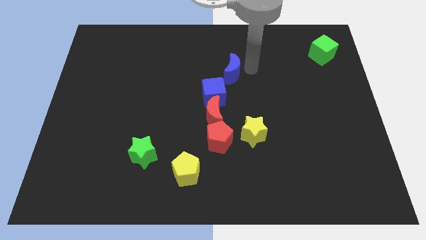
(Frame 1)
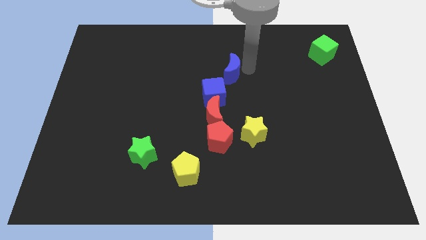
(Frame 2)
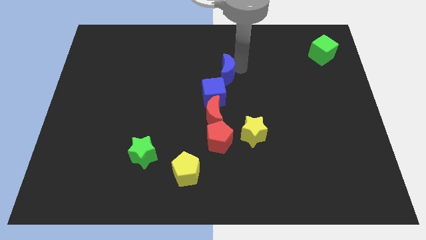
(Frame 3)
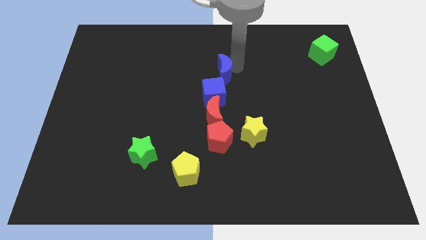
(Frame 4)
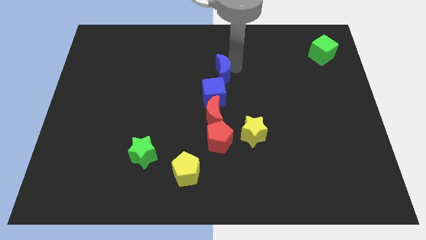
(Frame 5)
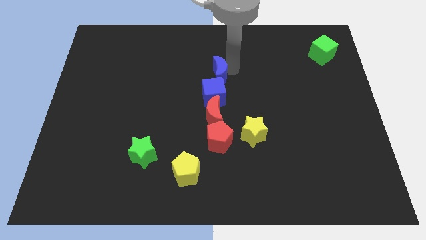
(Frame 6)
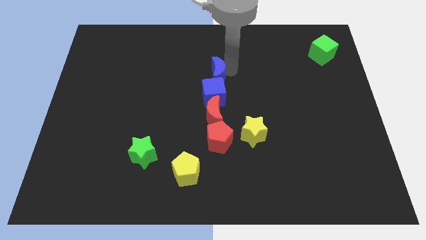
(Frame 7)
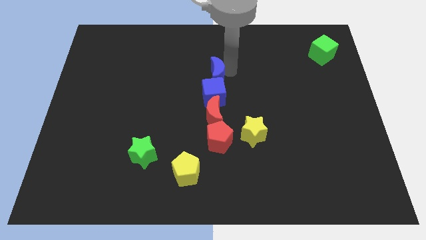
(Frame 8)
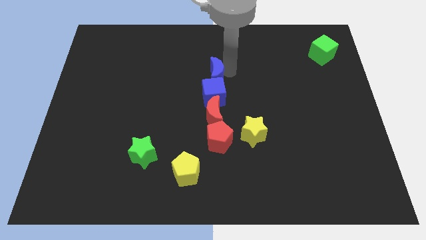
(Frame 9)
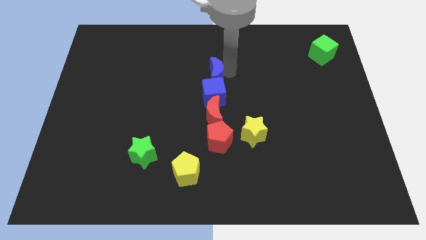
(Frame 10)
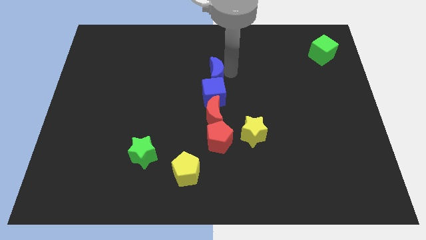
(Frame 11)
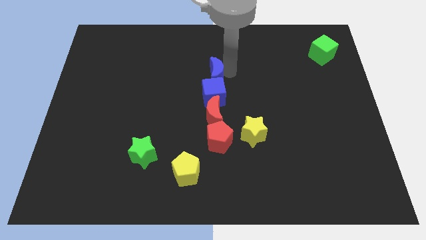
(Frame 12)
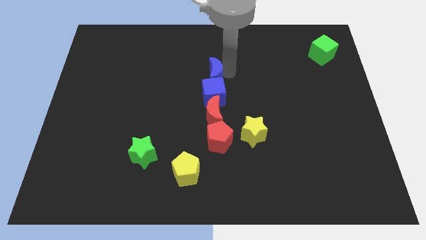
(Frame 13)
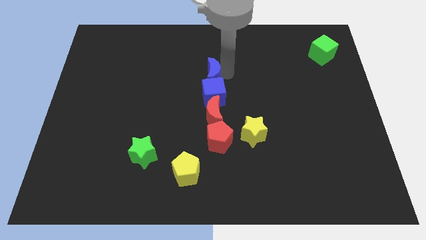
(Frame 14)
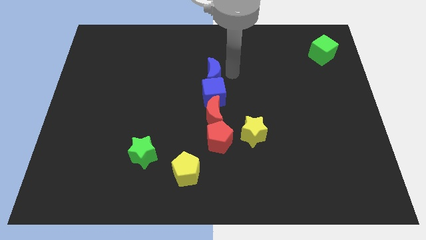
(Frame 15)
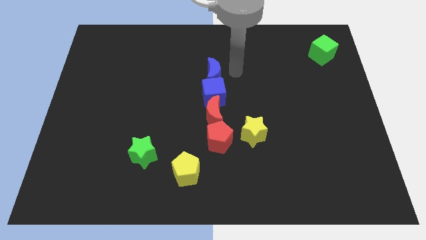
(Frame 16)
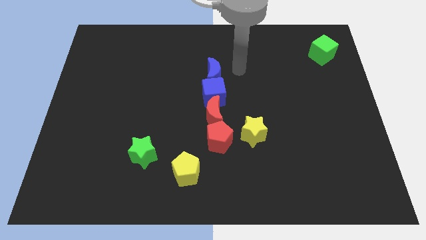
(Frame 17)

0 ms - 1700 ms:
place the blue crescent above the blue cube

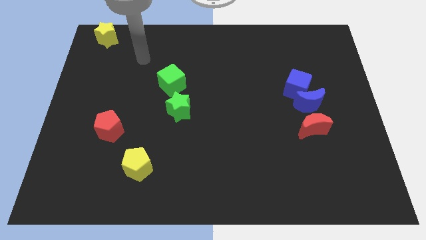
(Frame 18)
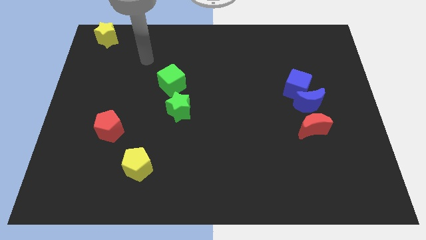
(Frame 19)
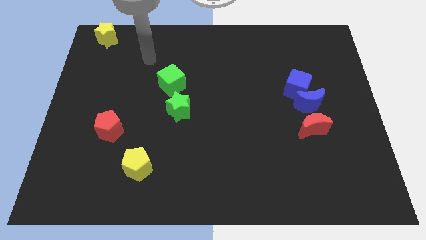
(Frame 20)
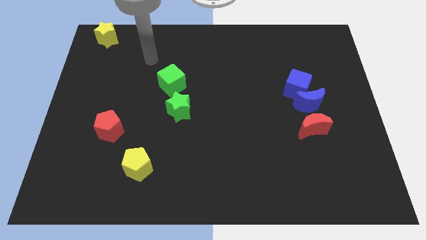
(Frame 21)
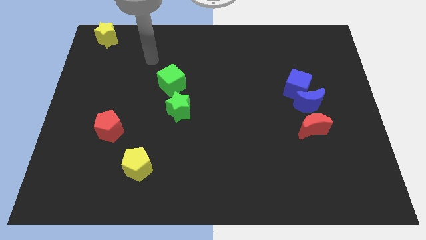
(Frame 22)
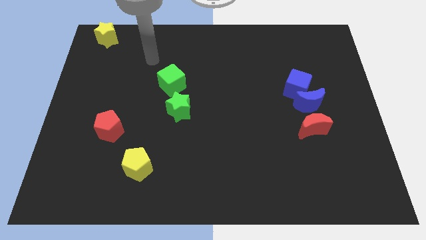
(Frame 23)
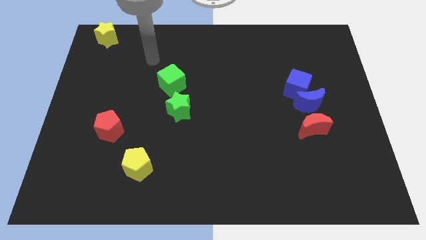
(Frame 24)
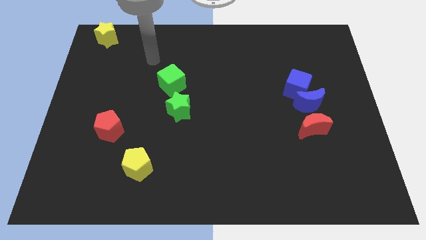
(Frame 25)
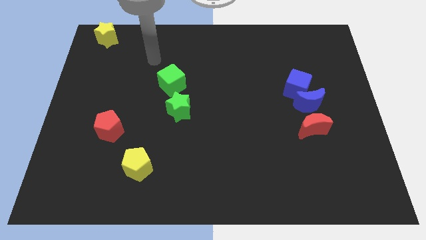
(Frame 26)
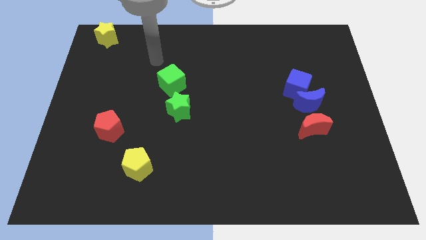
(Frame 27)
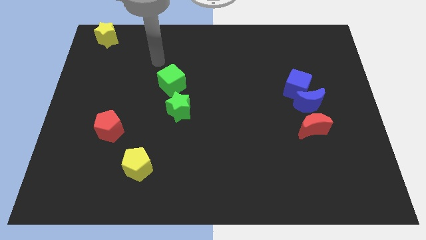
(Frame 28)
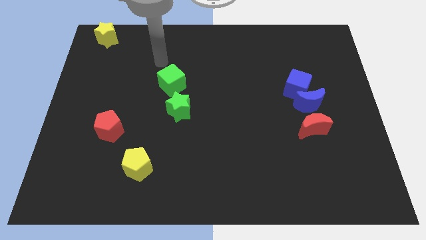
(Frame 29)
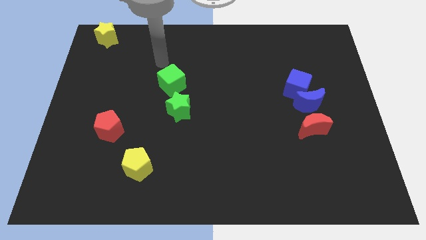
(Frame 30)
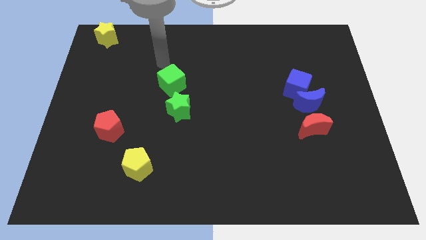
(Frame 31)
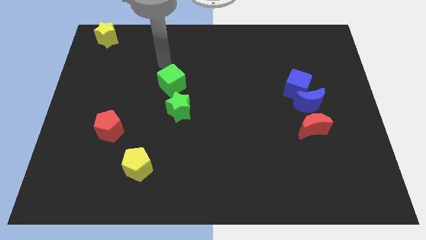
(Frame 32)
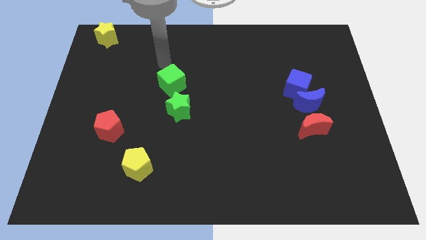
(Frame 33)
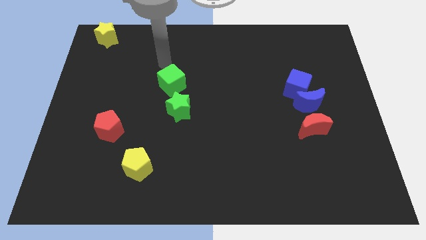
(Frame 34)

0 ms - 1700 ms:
move your arm to the top of the green cube

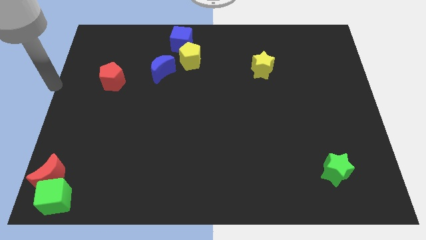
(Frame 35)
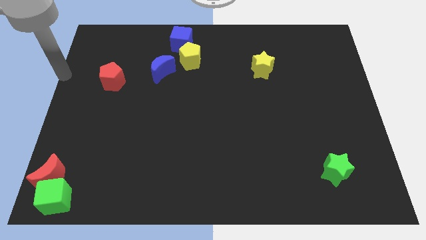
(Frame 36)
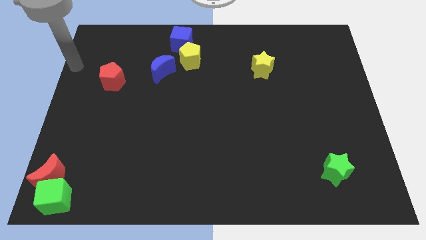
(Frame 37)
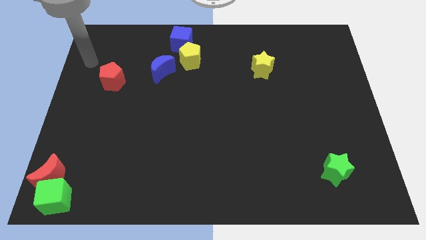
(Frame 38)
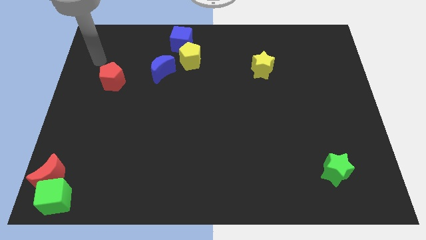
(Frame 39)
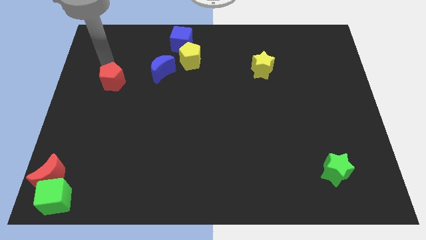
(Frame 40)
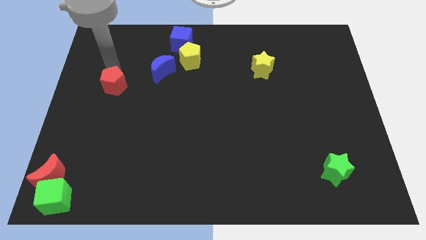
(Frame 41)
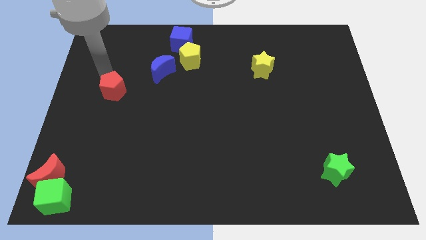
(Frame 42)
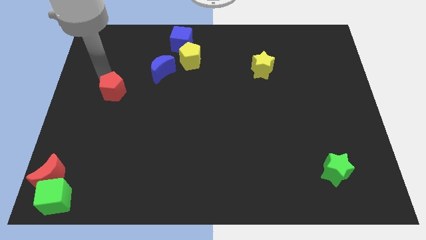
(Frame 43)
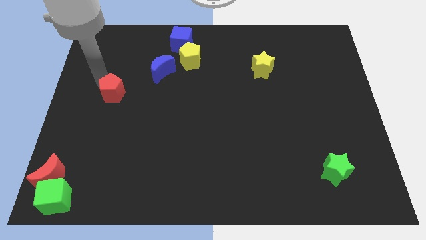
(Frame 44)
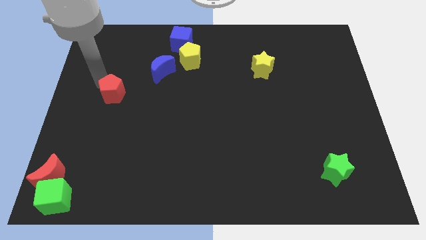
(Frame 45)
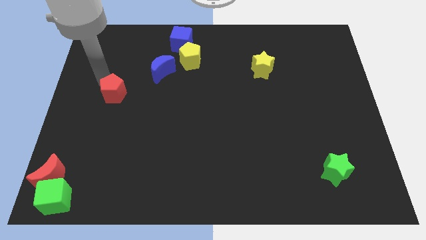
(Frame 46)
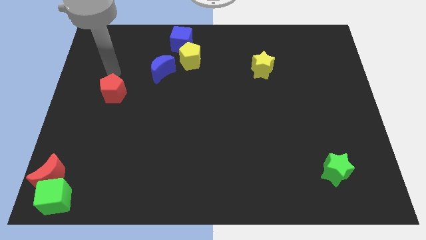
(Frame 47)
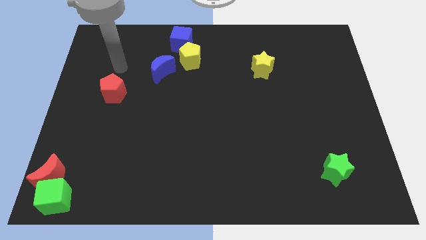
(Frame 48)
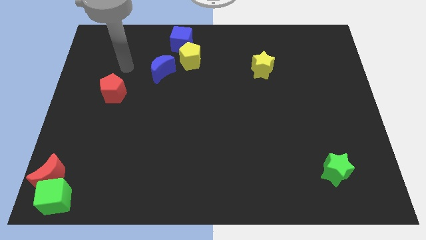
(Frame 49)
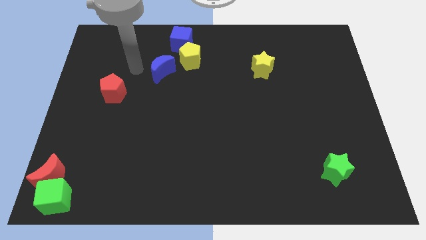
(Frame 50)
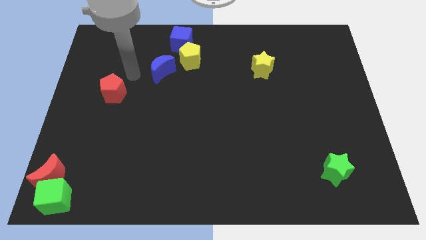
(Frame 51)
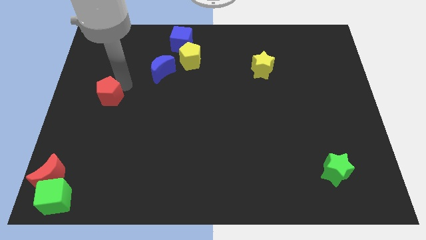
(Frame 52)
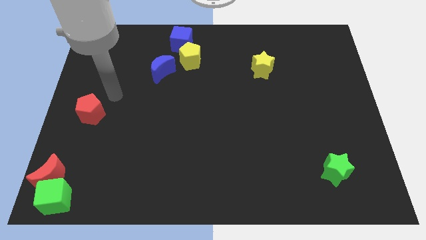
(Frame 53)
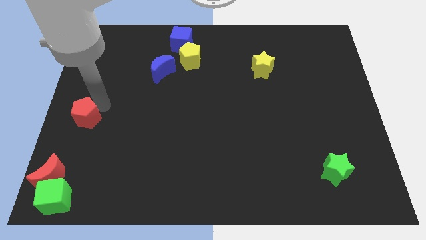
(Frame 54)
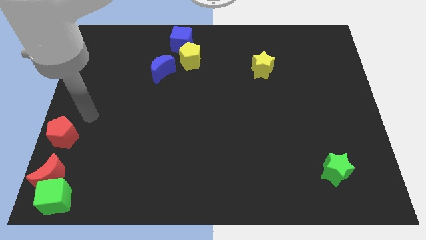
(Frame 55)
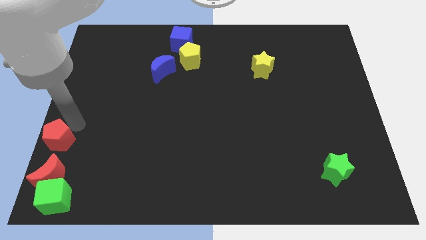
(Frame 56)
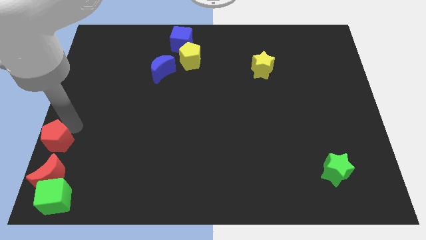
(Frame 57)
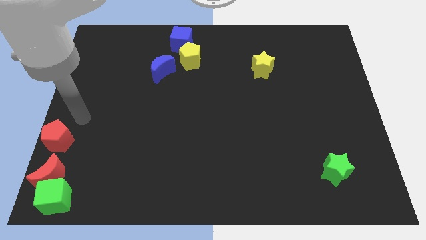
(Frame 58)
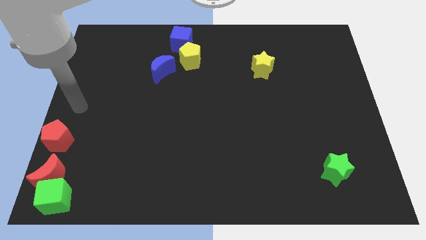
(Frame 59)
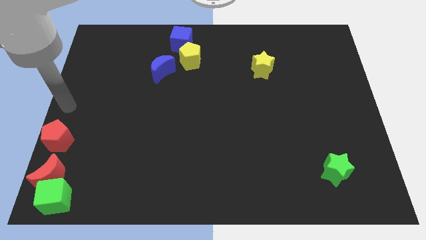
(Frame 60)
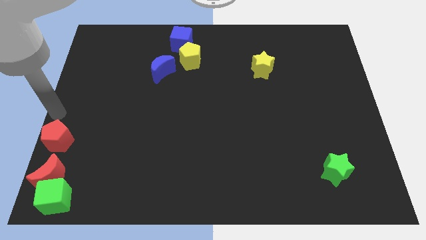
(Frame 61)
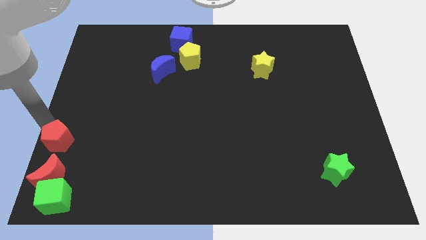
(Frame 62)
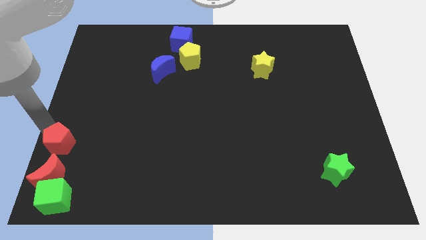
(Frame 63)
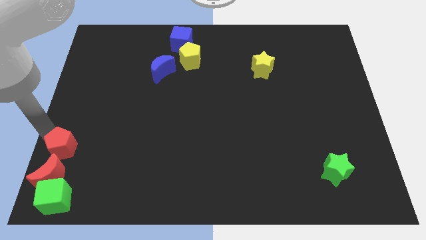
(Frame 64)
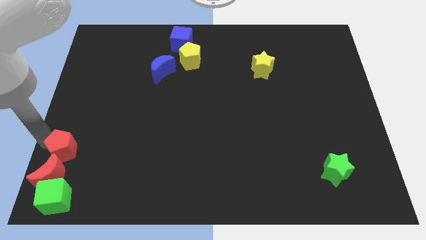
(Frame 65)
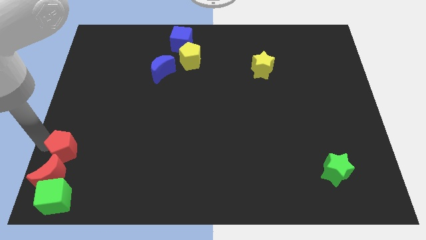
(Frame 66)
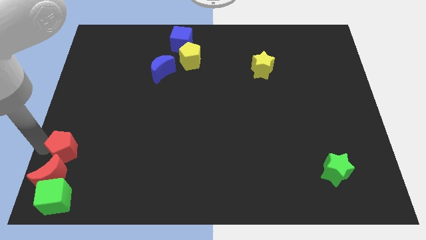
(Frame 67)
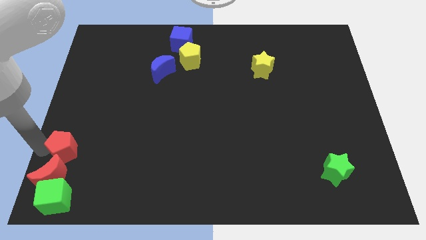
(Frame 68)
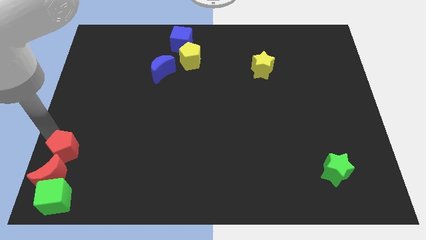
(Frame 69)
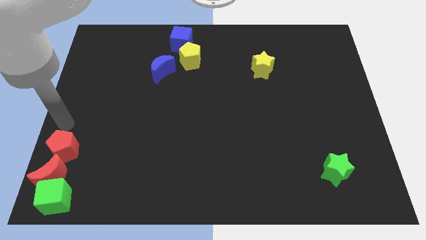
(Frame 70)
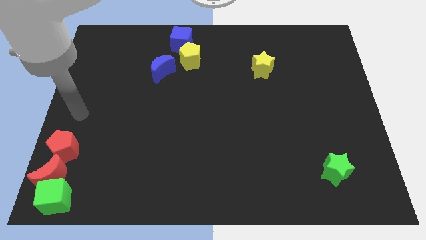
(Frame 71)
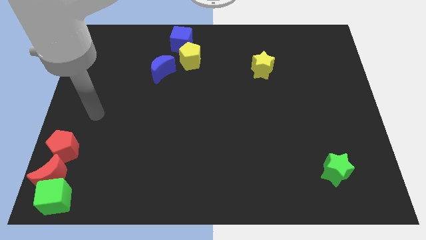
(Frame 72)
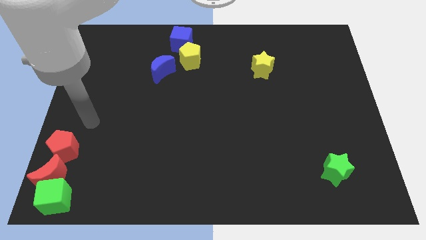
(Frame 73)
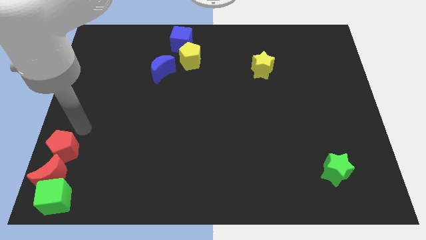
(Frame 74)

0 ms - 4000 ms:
push the red pentagon towards the red crescent

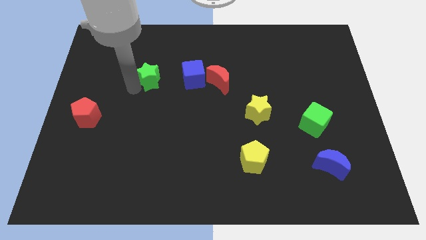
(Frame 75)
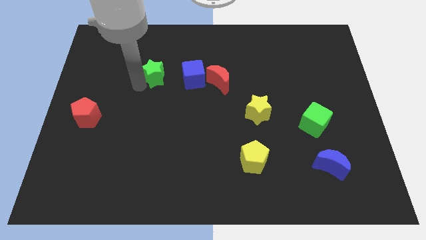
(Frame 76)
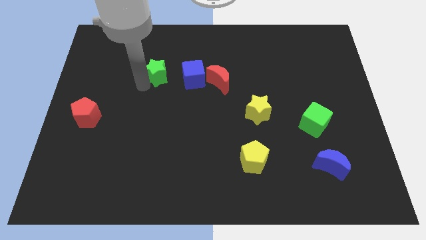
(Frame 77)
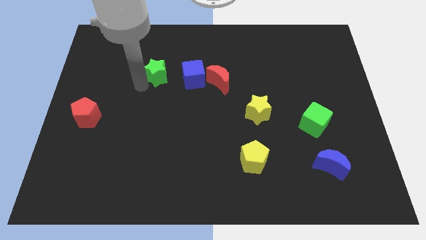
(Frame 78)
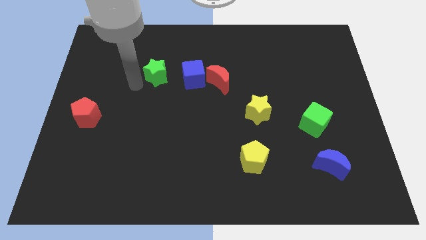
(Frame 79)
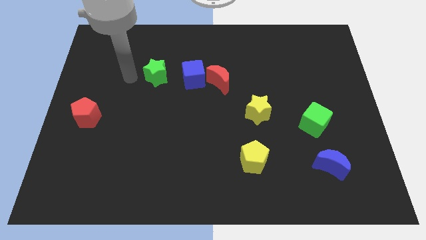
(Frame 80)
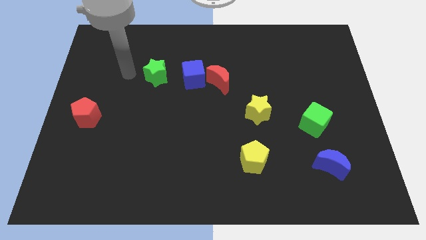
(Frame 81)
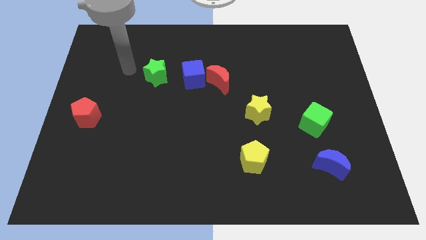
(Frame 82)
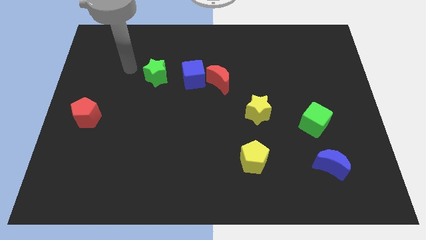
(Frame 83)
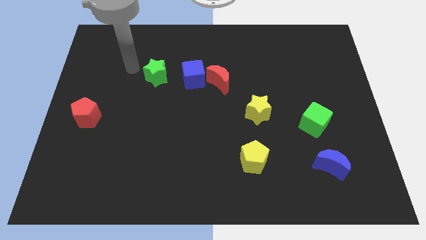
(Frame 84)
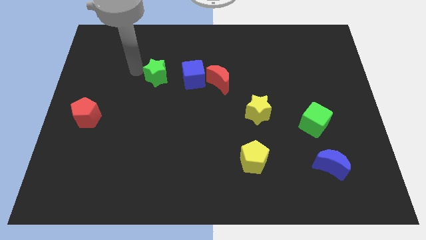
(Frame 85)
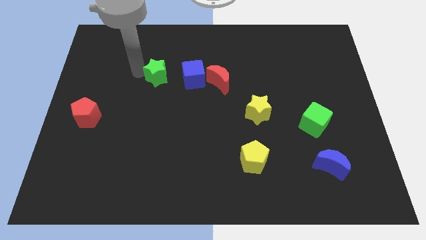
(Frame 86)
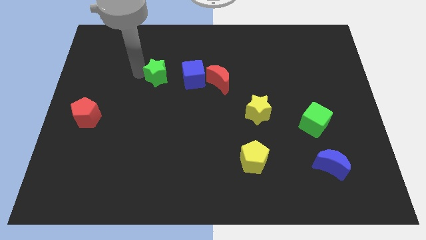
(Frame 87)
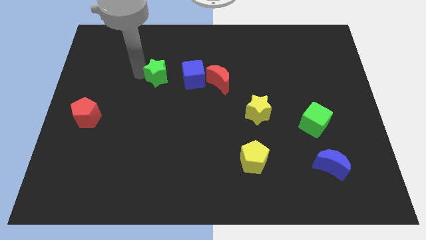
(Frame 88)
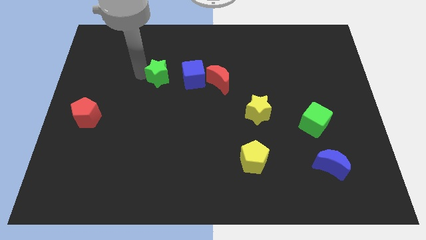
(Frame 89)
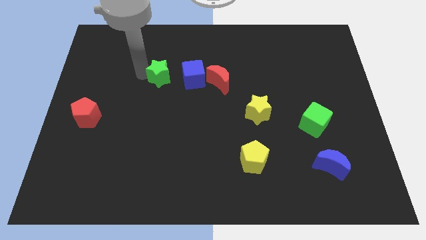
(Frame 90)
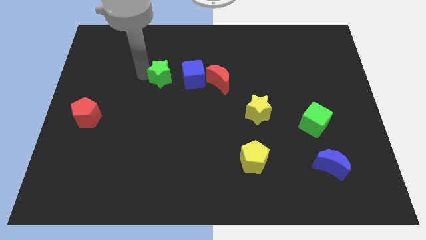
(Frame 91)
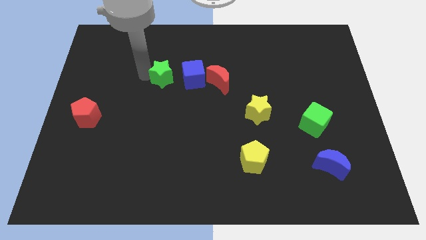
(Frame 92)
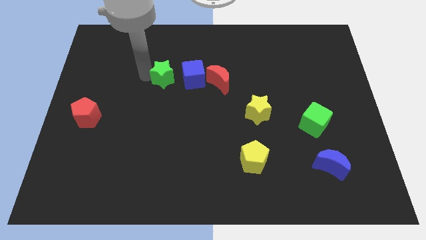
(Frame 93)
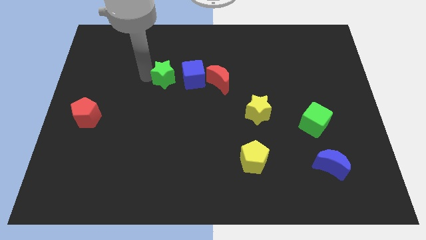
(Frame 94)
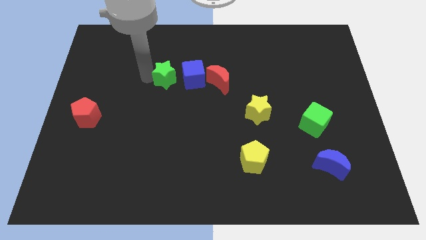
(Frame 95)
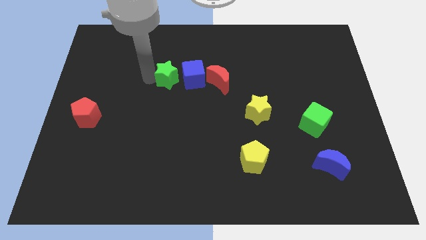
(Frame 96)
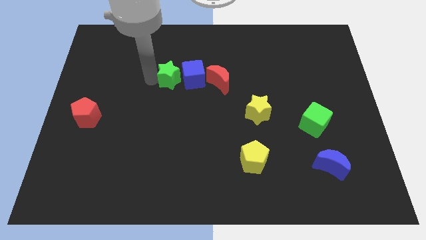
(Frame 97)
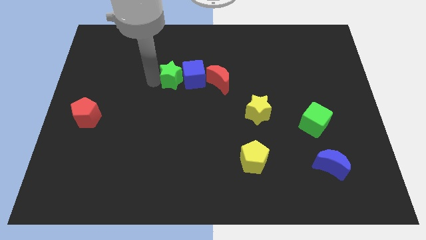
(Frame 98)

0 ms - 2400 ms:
push the green star to the left of the blue cube
